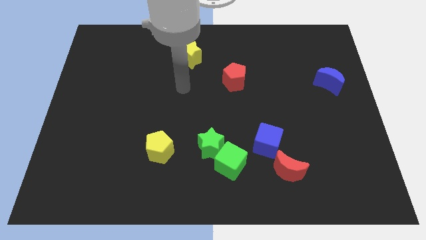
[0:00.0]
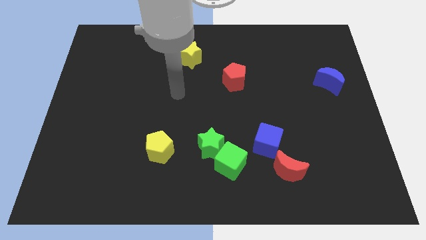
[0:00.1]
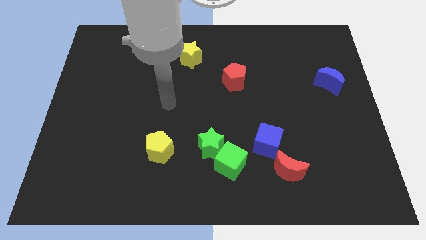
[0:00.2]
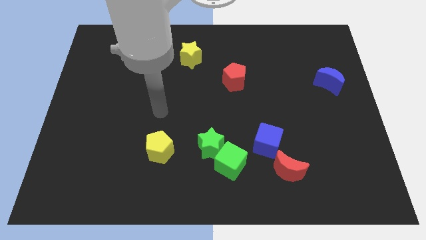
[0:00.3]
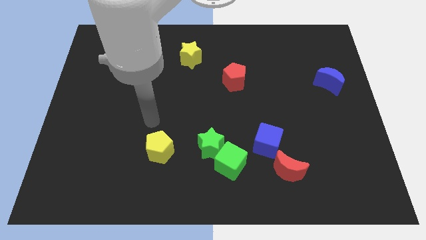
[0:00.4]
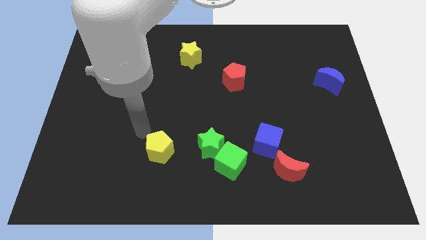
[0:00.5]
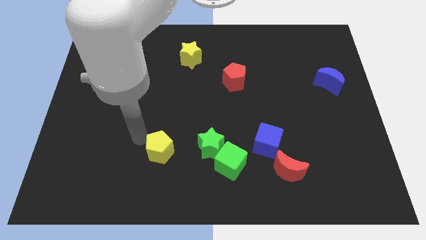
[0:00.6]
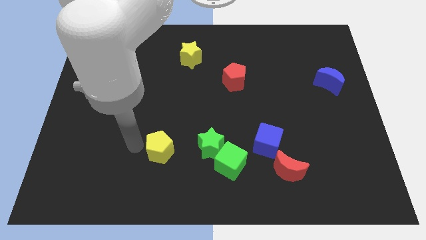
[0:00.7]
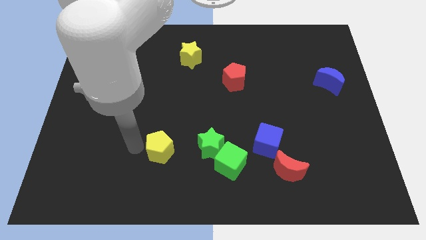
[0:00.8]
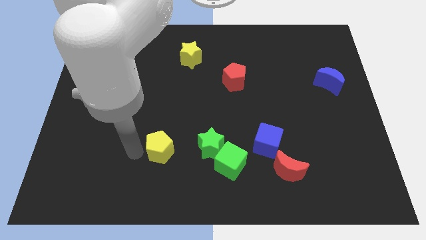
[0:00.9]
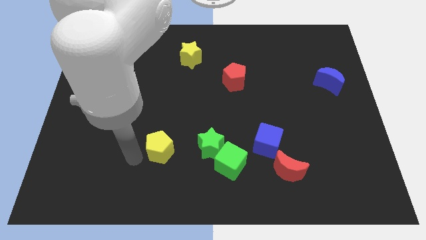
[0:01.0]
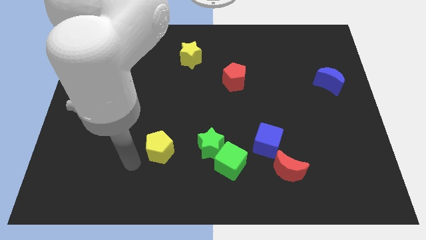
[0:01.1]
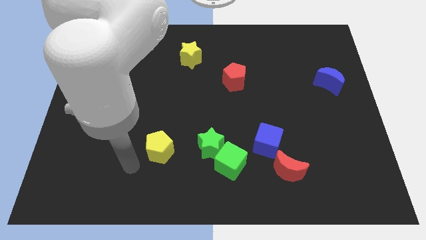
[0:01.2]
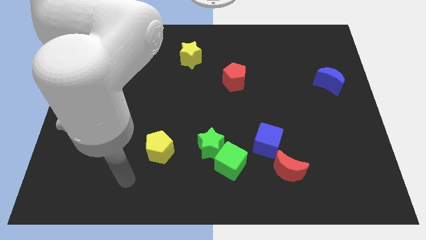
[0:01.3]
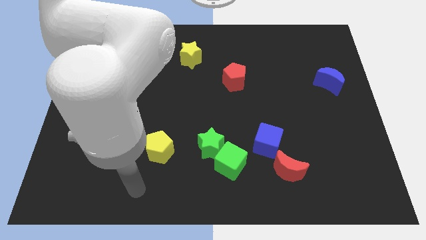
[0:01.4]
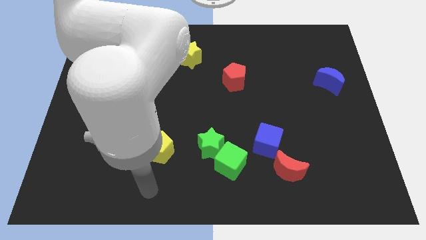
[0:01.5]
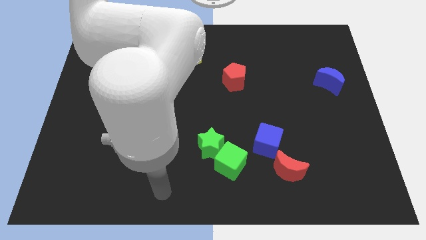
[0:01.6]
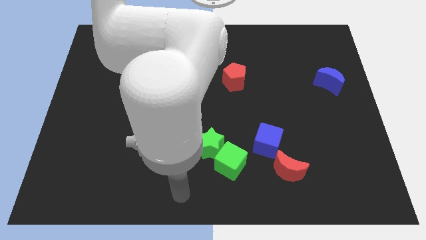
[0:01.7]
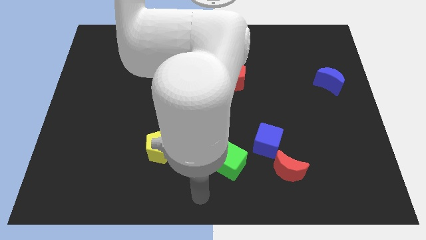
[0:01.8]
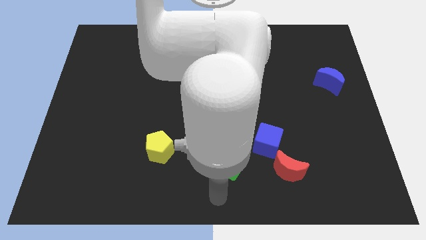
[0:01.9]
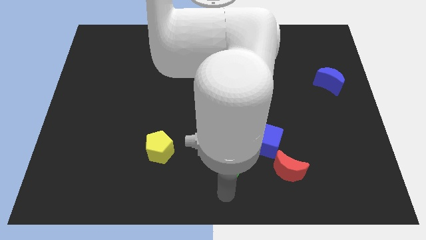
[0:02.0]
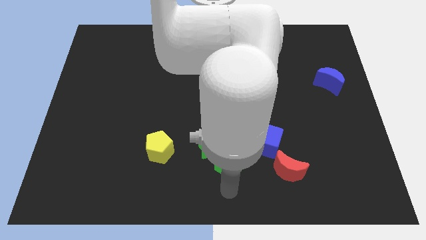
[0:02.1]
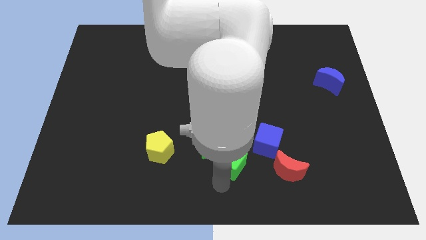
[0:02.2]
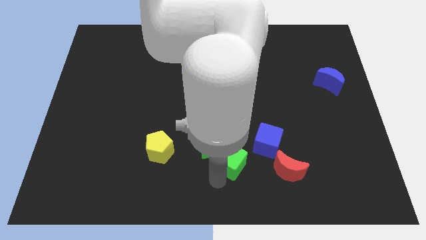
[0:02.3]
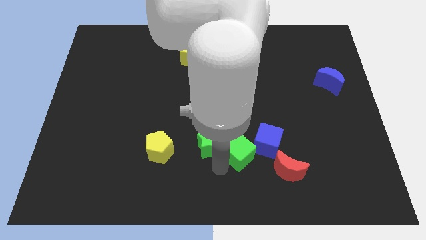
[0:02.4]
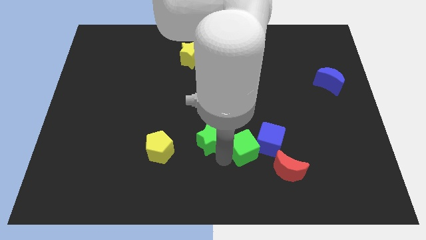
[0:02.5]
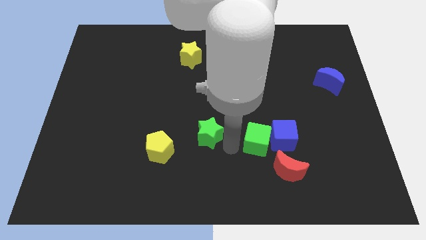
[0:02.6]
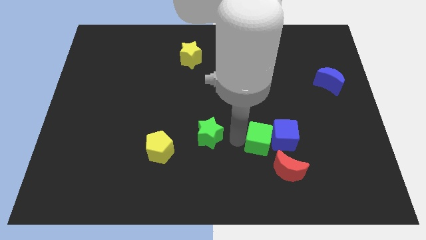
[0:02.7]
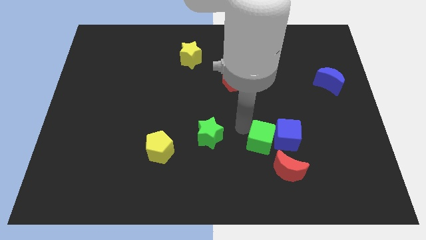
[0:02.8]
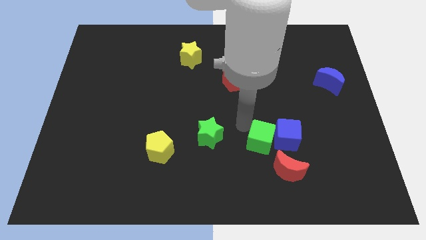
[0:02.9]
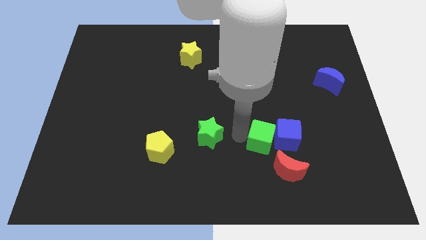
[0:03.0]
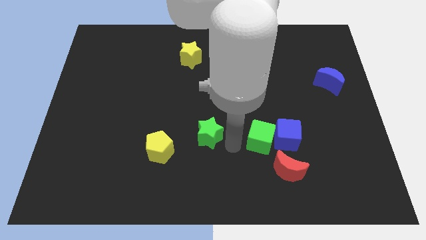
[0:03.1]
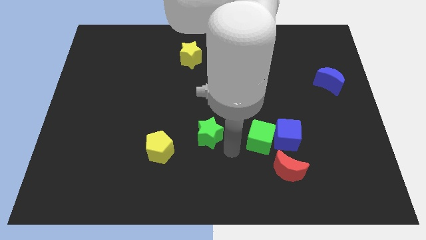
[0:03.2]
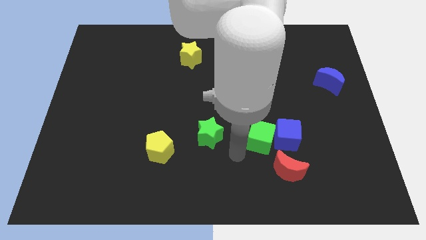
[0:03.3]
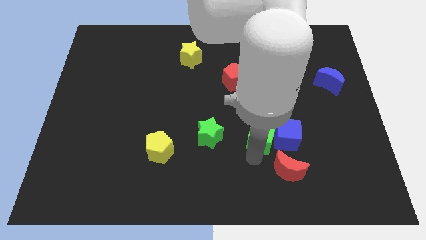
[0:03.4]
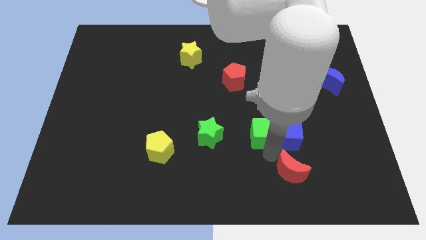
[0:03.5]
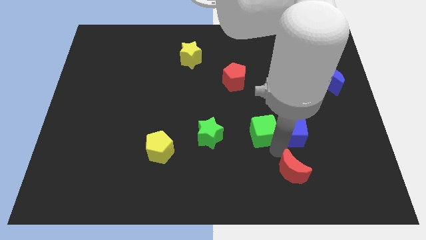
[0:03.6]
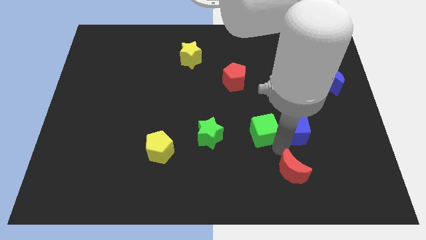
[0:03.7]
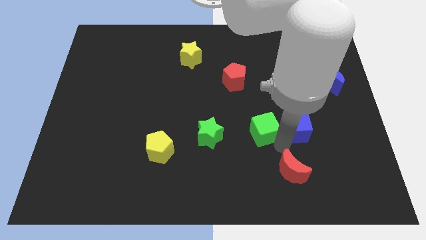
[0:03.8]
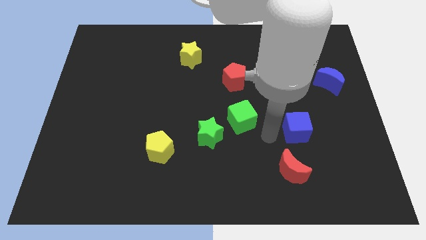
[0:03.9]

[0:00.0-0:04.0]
place the green cube to the bottom of the red pentagon

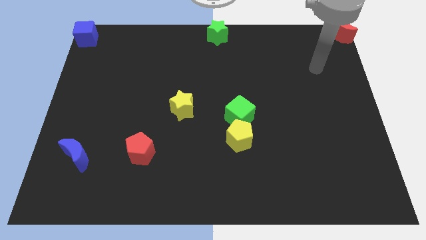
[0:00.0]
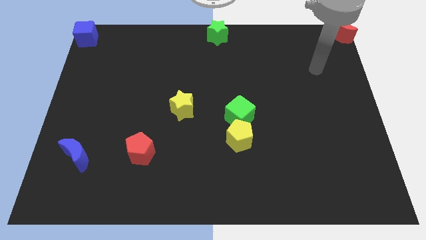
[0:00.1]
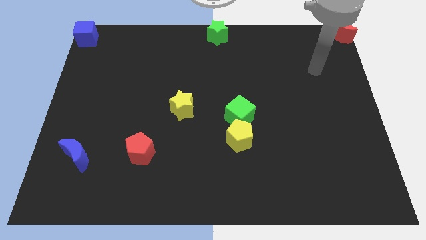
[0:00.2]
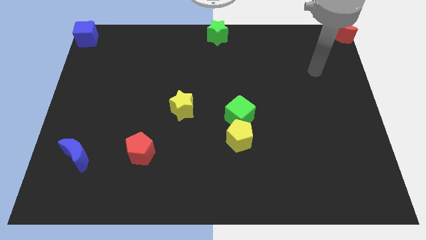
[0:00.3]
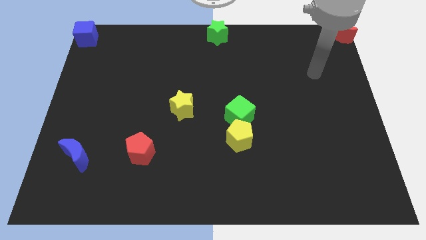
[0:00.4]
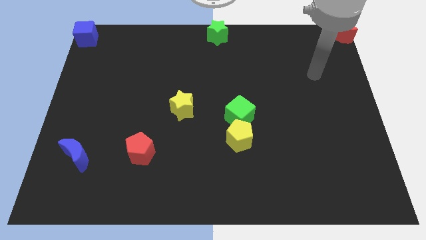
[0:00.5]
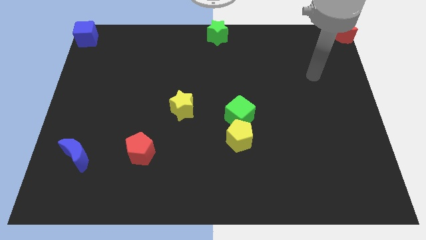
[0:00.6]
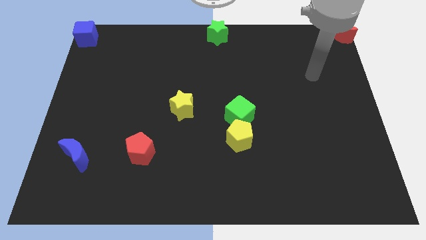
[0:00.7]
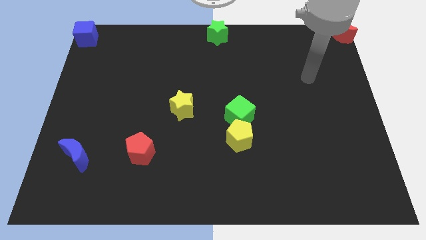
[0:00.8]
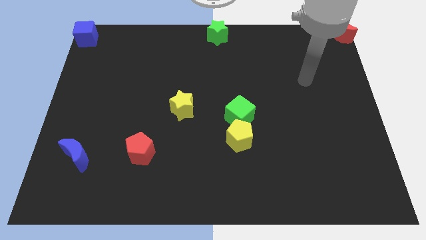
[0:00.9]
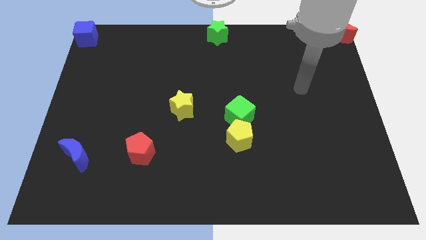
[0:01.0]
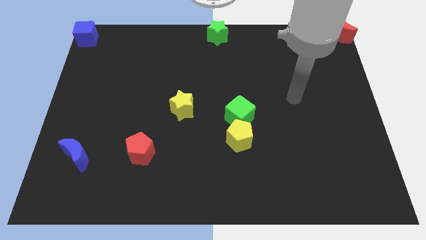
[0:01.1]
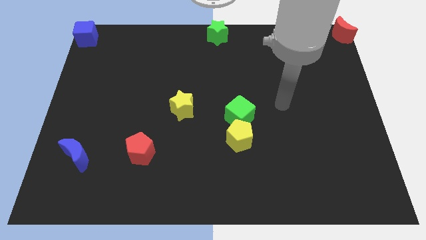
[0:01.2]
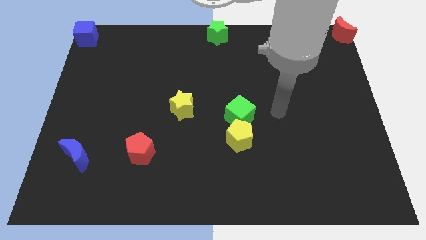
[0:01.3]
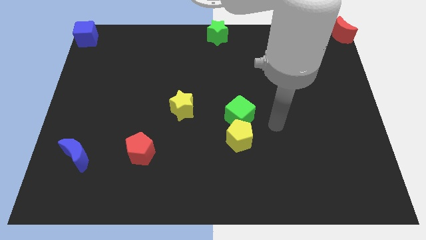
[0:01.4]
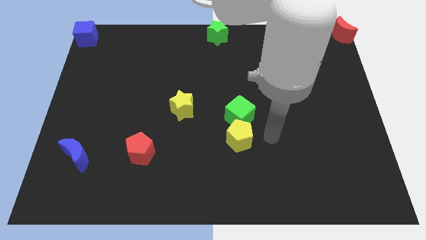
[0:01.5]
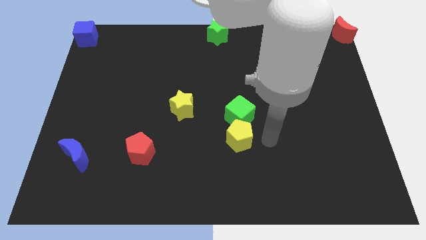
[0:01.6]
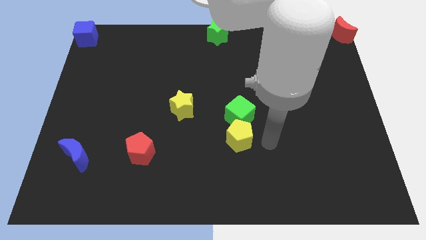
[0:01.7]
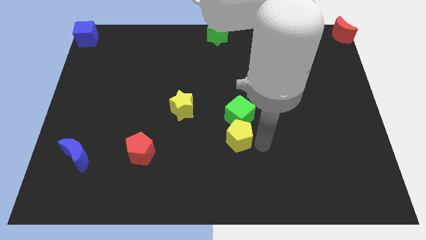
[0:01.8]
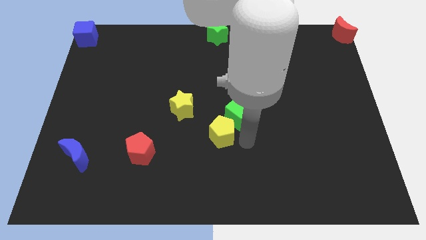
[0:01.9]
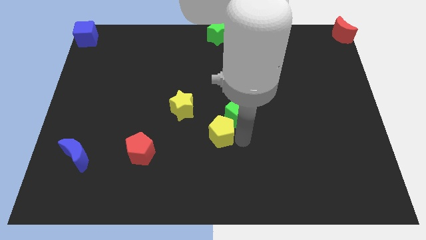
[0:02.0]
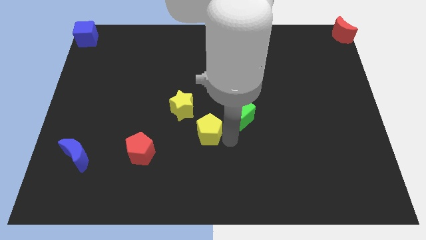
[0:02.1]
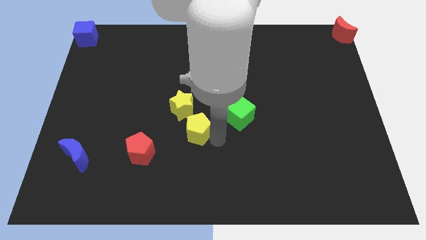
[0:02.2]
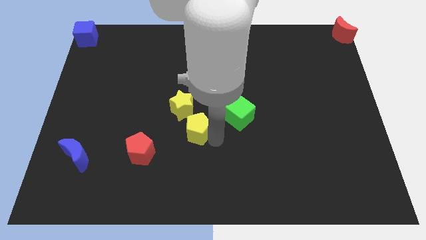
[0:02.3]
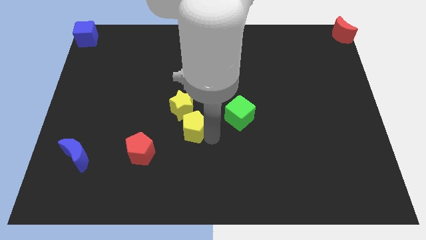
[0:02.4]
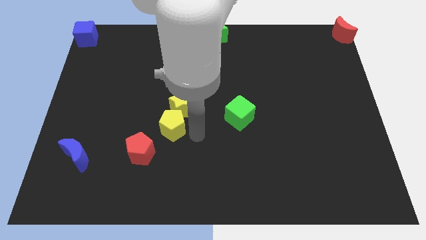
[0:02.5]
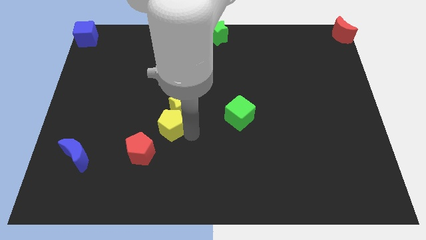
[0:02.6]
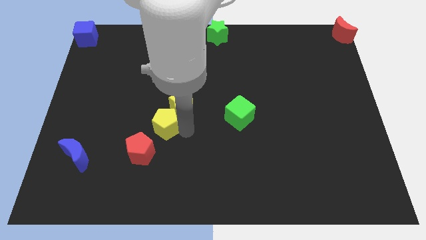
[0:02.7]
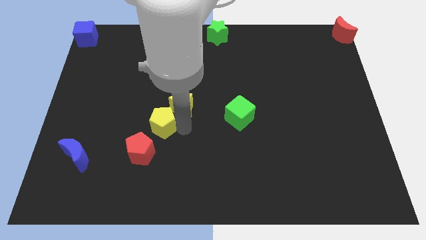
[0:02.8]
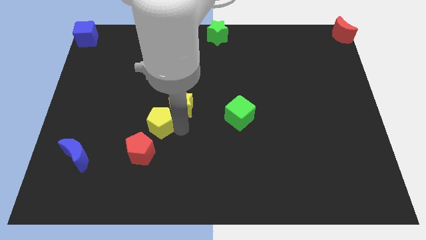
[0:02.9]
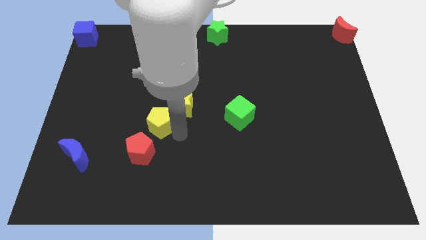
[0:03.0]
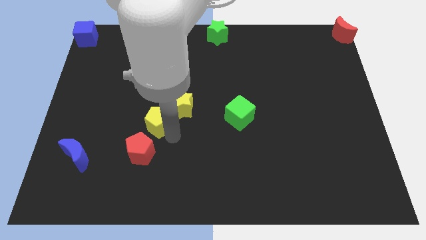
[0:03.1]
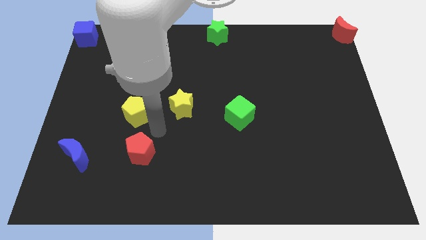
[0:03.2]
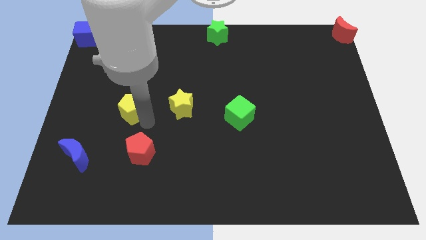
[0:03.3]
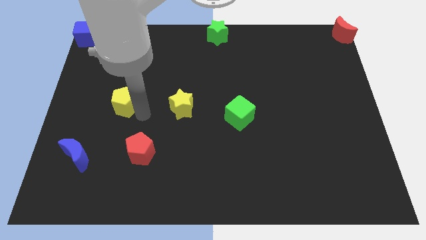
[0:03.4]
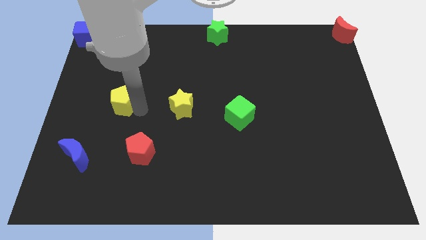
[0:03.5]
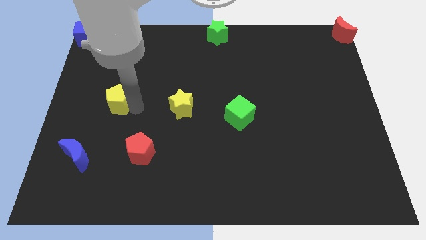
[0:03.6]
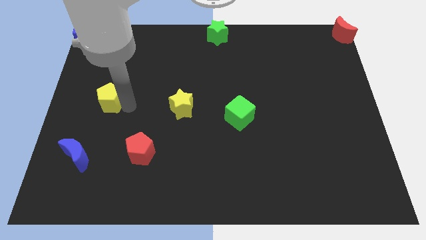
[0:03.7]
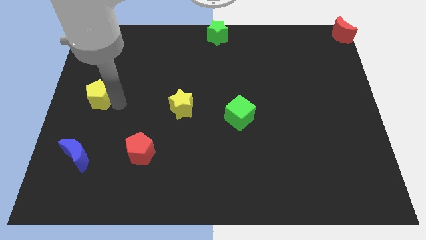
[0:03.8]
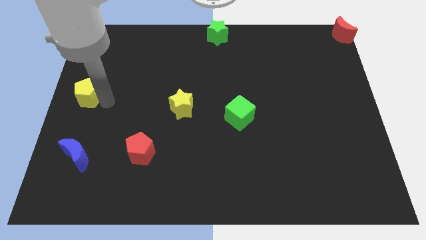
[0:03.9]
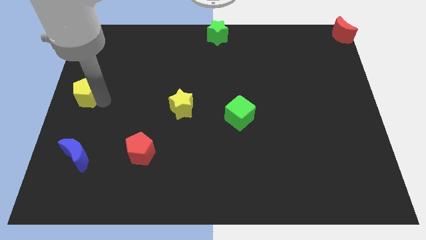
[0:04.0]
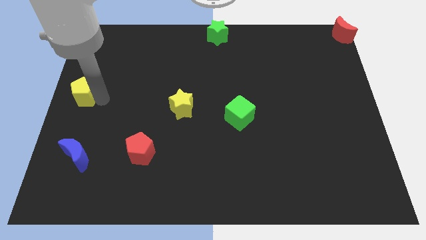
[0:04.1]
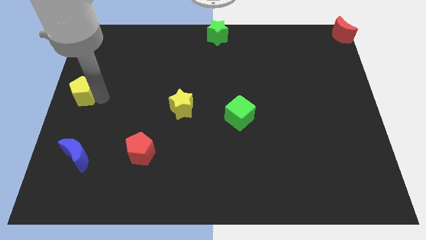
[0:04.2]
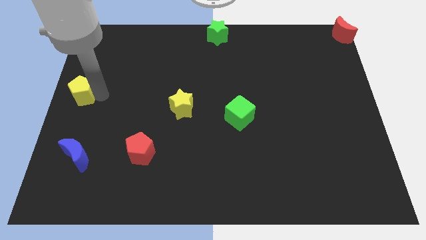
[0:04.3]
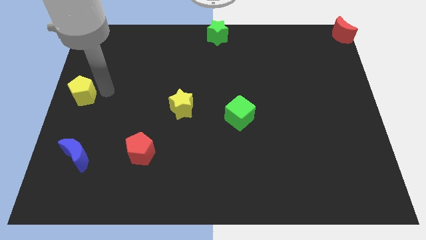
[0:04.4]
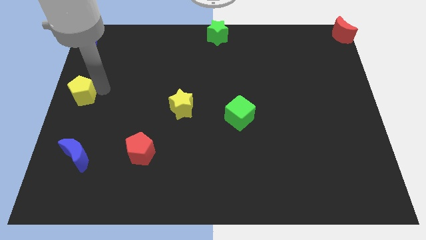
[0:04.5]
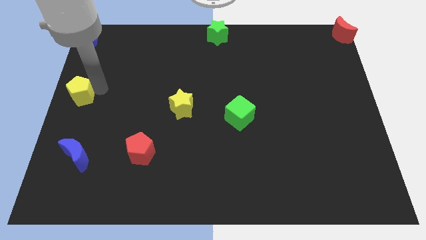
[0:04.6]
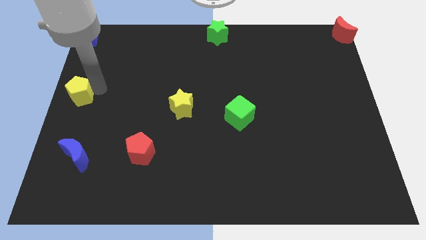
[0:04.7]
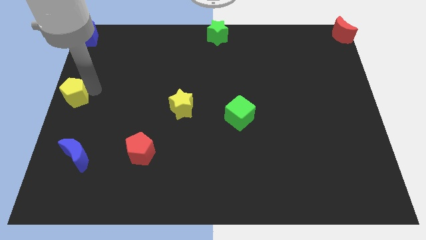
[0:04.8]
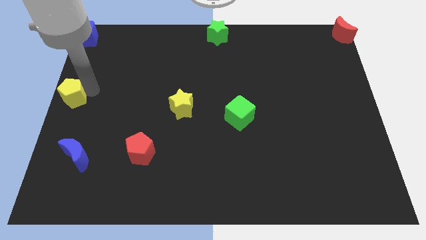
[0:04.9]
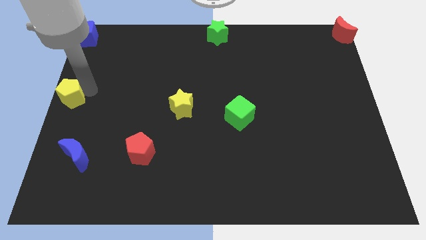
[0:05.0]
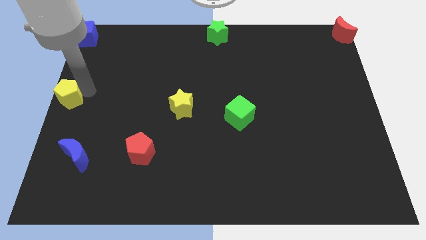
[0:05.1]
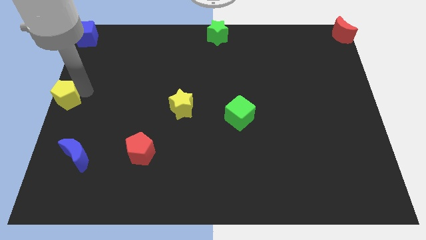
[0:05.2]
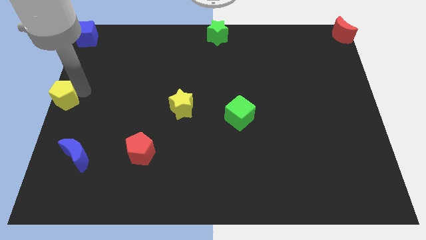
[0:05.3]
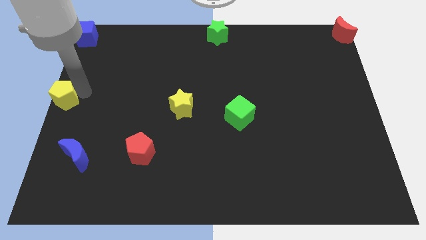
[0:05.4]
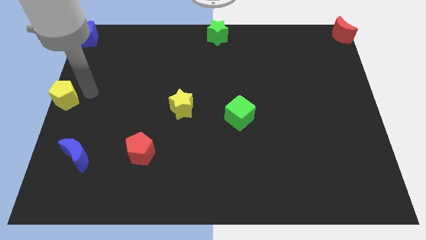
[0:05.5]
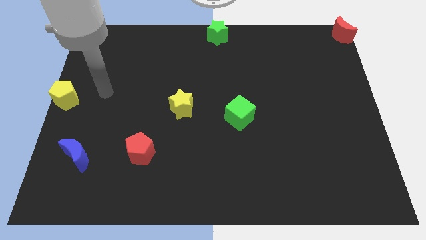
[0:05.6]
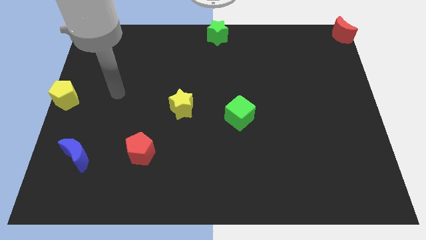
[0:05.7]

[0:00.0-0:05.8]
move yellow pentagon to the left center of the board
